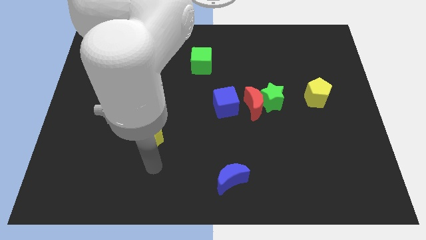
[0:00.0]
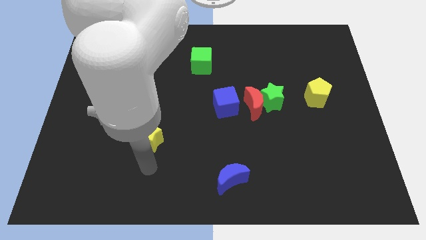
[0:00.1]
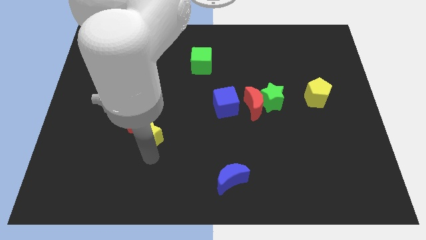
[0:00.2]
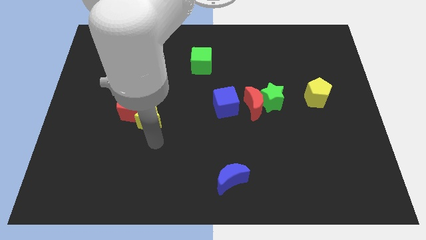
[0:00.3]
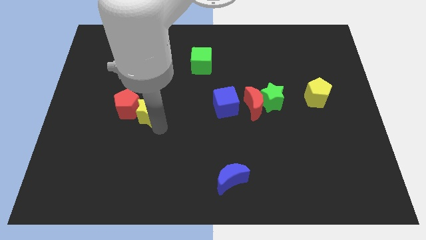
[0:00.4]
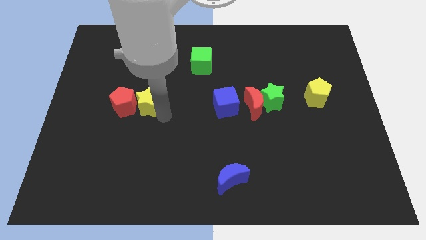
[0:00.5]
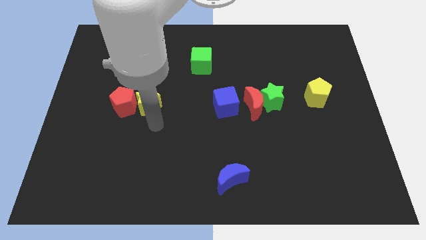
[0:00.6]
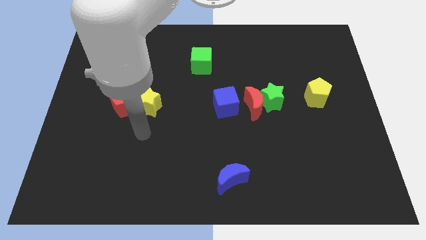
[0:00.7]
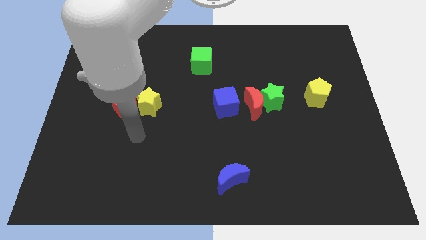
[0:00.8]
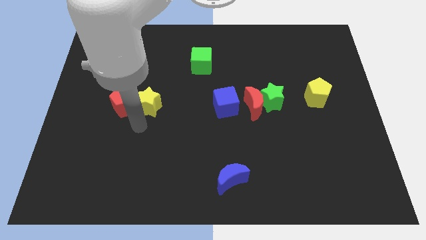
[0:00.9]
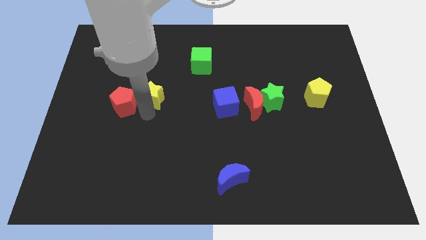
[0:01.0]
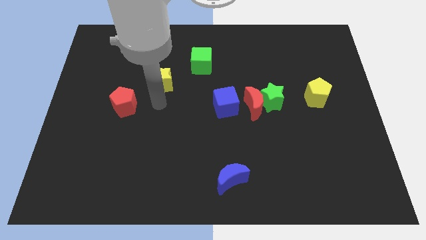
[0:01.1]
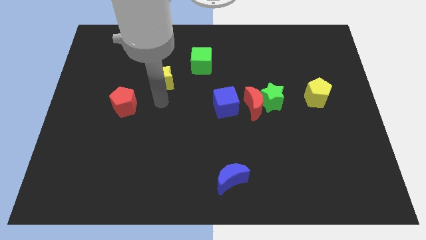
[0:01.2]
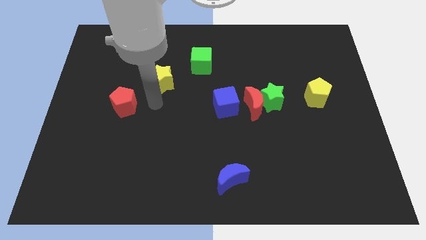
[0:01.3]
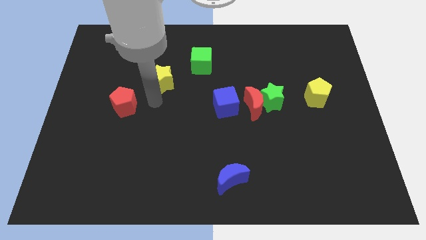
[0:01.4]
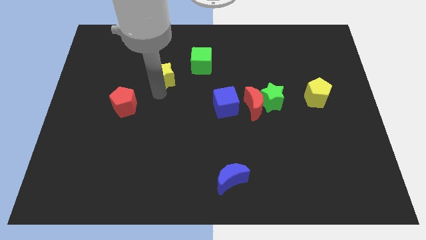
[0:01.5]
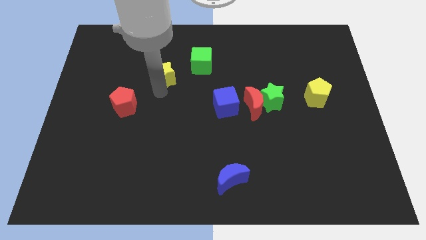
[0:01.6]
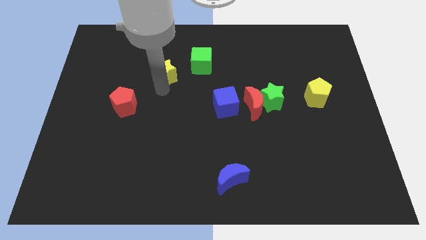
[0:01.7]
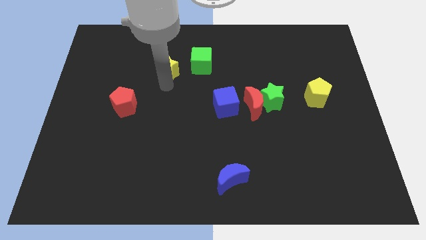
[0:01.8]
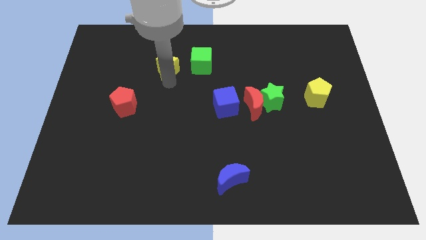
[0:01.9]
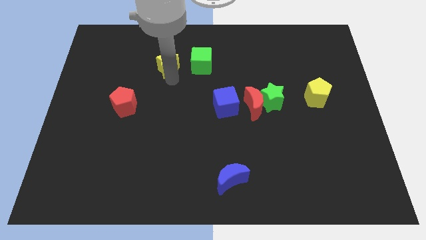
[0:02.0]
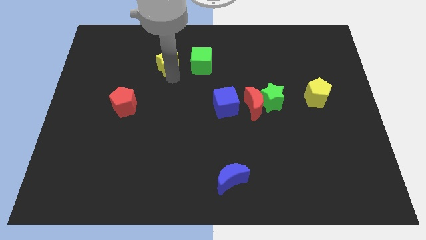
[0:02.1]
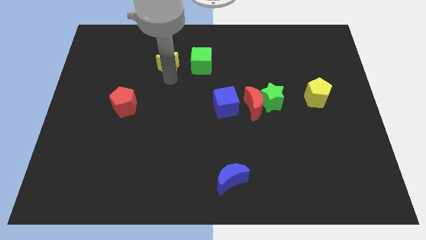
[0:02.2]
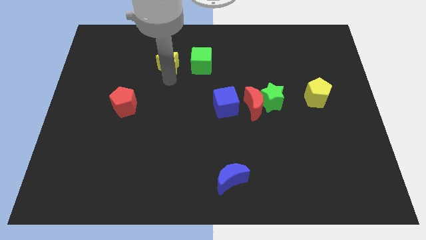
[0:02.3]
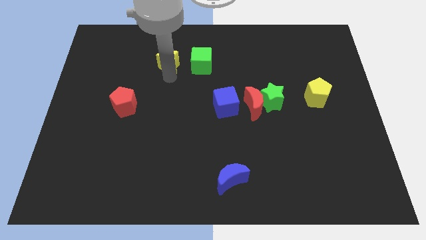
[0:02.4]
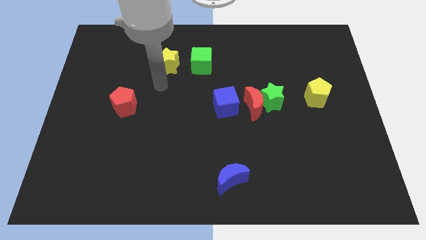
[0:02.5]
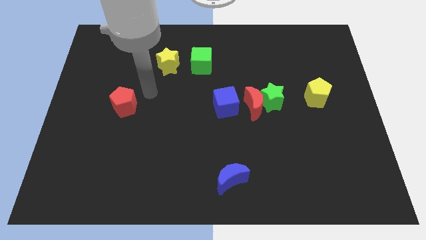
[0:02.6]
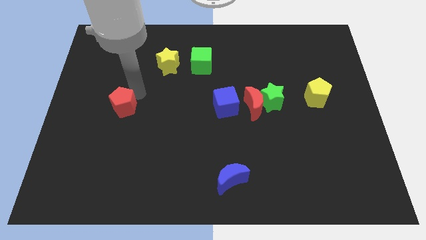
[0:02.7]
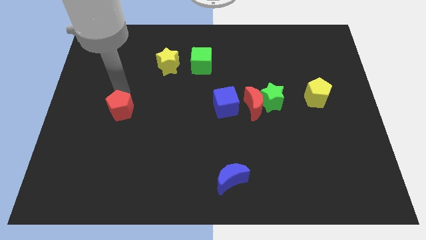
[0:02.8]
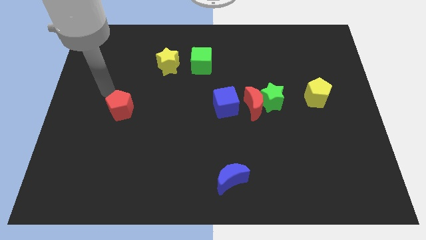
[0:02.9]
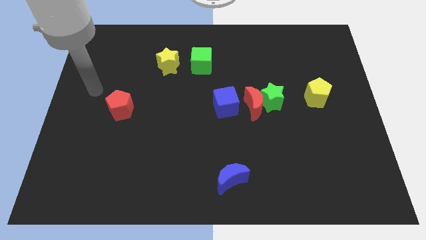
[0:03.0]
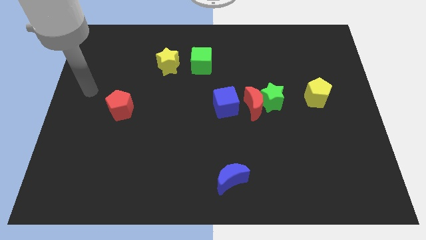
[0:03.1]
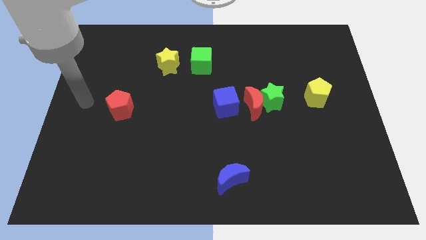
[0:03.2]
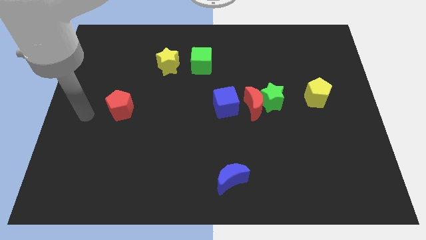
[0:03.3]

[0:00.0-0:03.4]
put the yellow star to the left side of the green cube

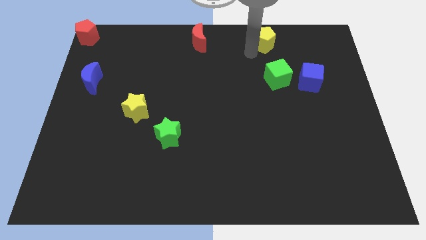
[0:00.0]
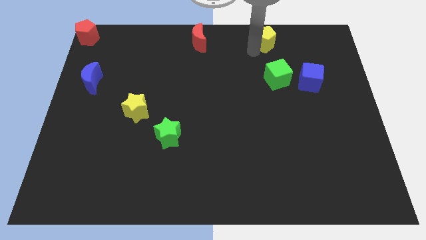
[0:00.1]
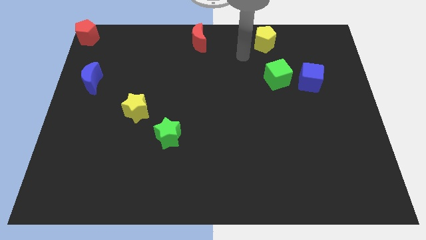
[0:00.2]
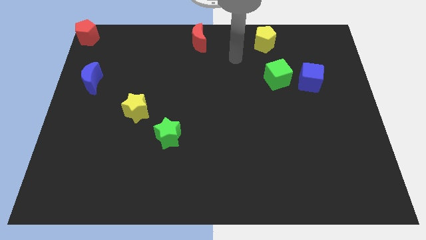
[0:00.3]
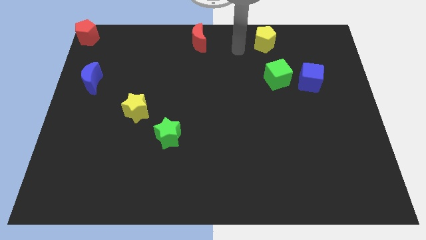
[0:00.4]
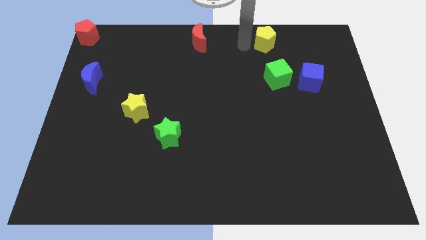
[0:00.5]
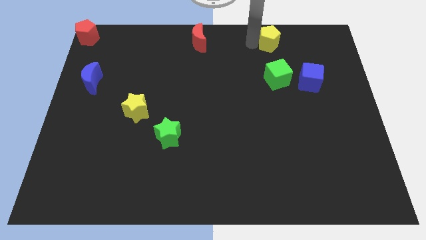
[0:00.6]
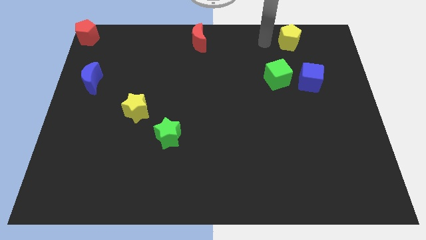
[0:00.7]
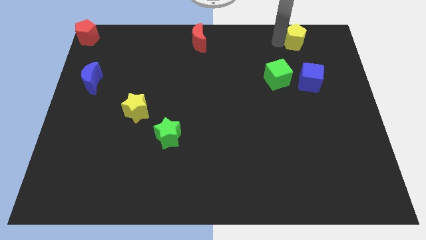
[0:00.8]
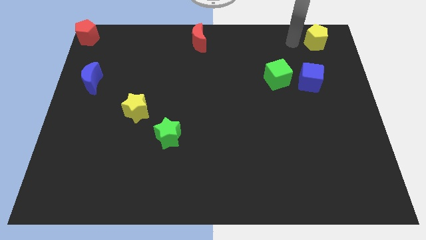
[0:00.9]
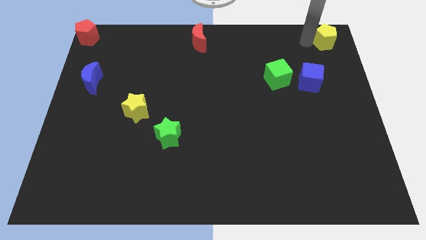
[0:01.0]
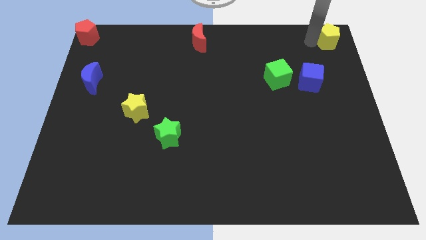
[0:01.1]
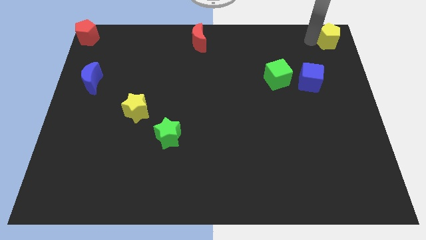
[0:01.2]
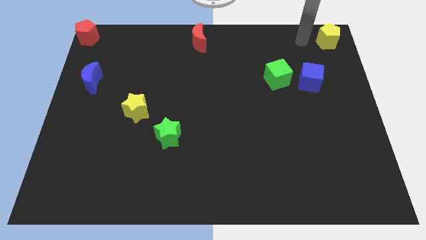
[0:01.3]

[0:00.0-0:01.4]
move the yellow pentagon to the top right corner of the board

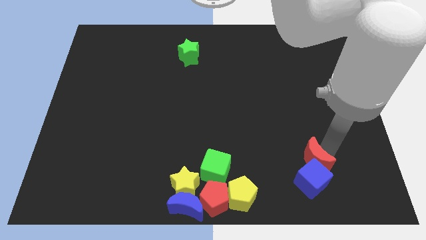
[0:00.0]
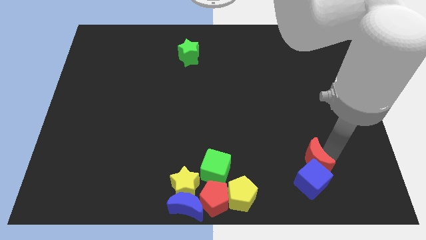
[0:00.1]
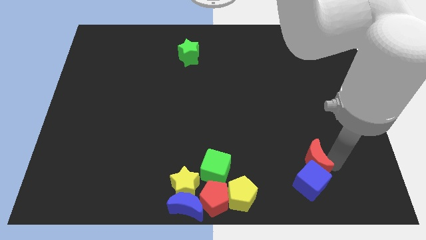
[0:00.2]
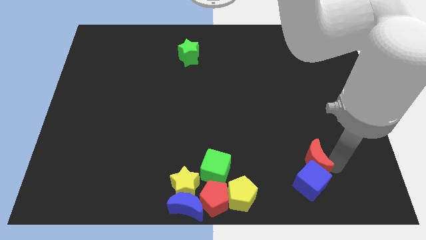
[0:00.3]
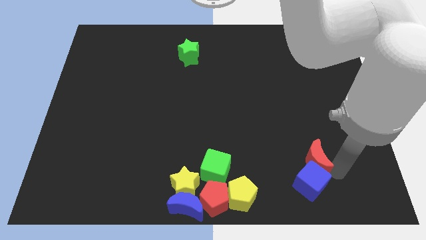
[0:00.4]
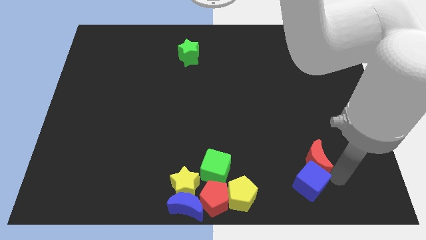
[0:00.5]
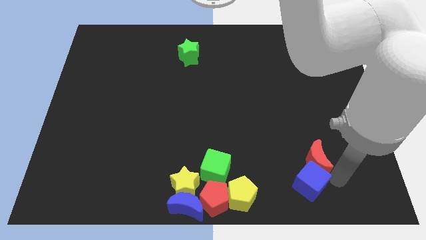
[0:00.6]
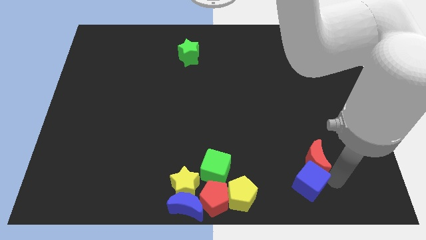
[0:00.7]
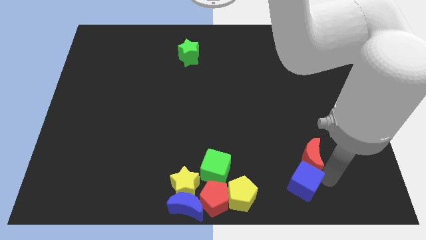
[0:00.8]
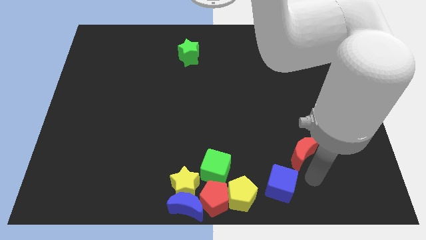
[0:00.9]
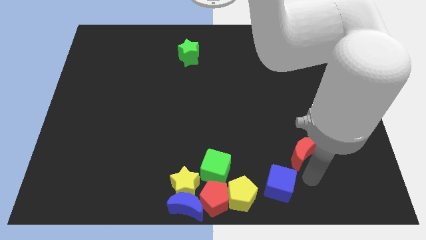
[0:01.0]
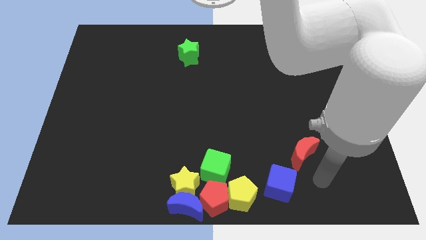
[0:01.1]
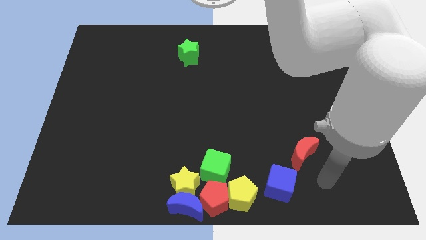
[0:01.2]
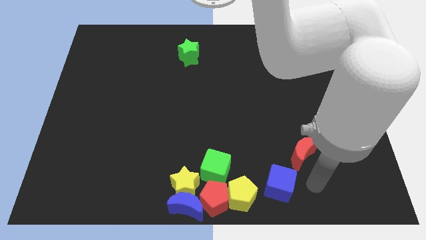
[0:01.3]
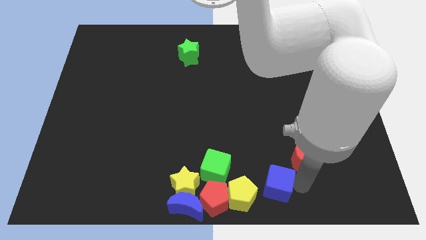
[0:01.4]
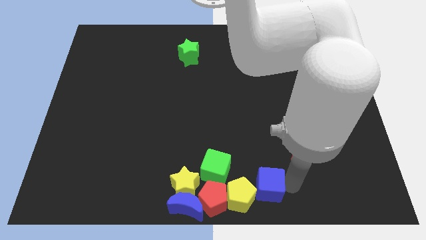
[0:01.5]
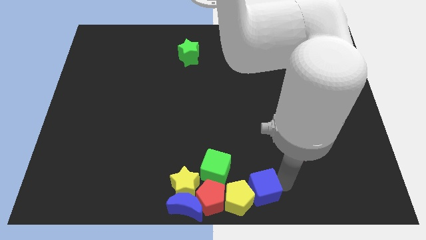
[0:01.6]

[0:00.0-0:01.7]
push the blue cube into the yellow pentagon

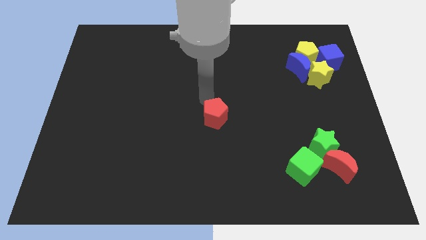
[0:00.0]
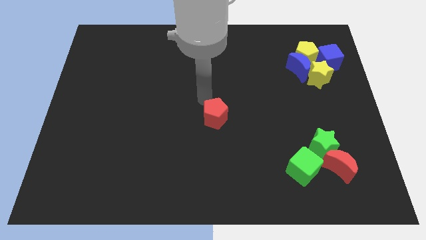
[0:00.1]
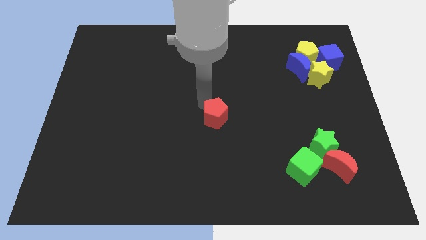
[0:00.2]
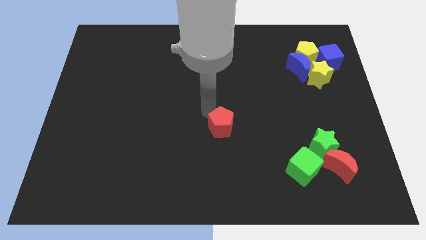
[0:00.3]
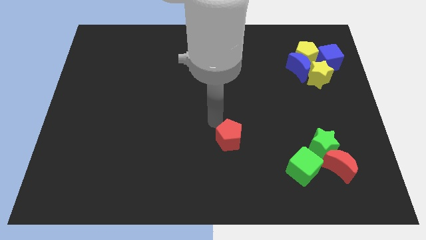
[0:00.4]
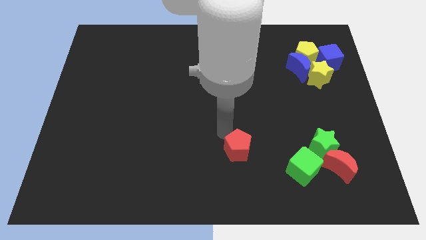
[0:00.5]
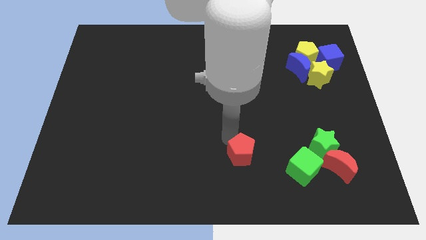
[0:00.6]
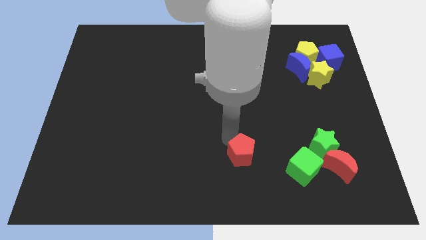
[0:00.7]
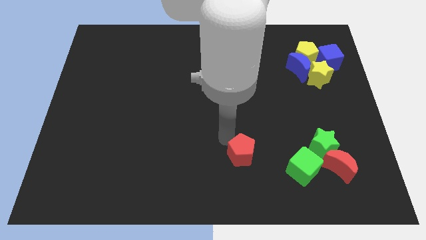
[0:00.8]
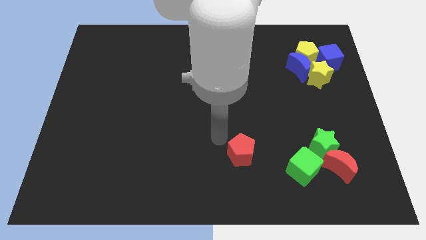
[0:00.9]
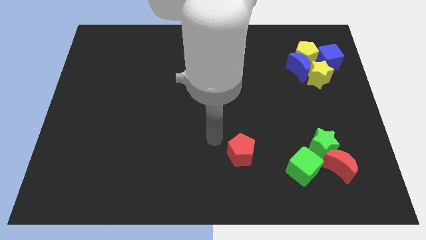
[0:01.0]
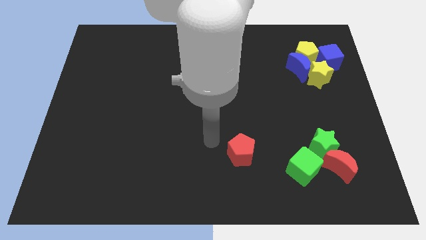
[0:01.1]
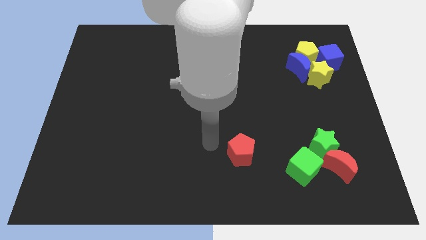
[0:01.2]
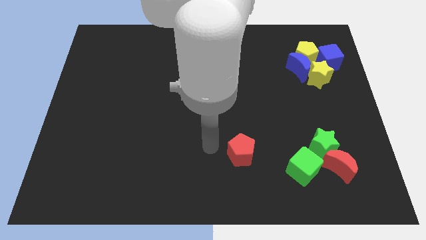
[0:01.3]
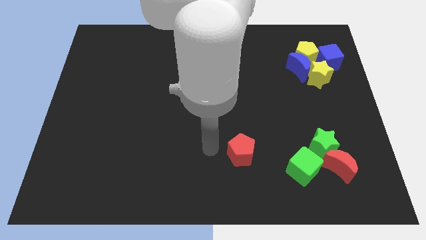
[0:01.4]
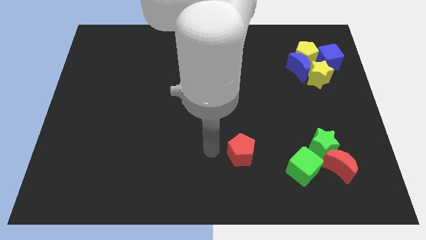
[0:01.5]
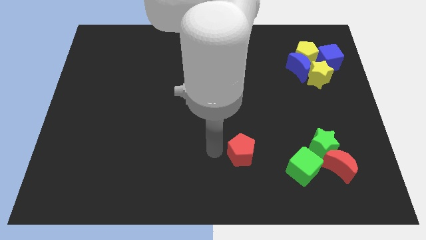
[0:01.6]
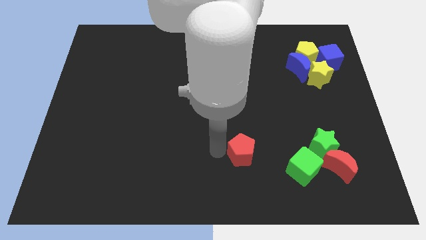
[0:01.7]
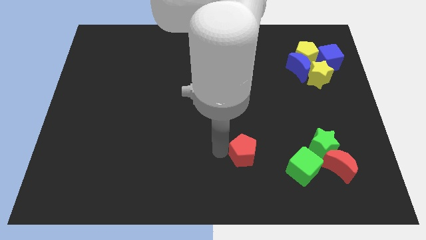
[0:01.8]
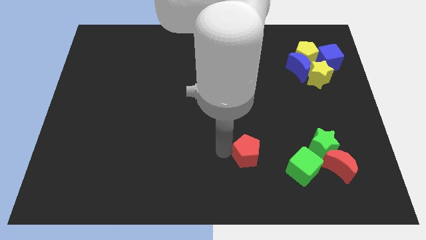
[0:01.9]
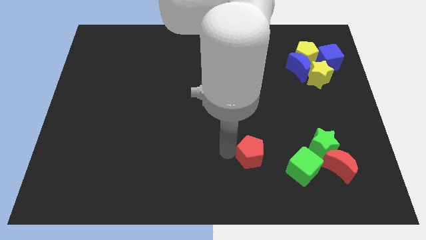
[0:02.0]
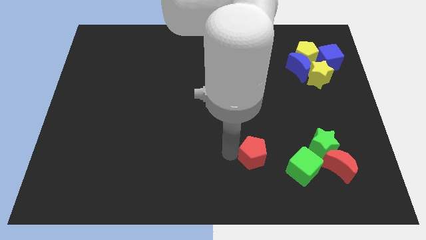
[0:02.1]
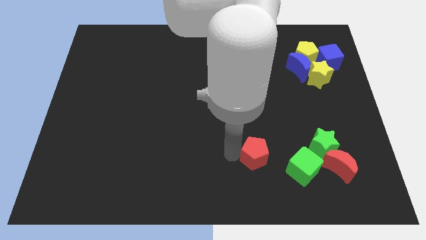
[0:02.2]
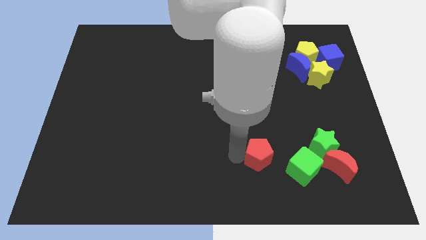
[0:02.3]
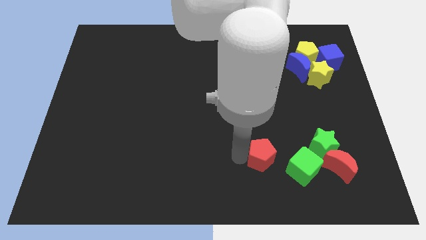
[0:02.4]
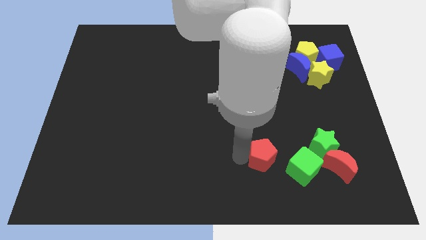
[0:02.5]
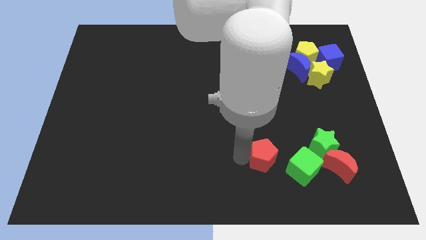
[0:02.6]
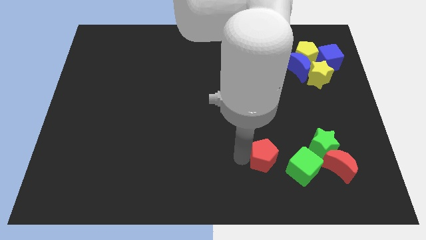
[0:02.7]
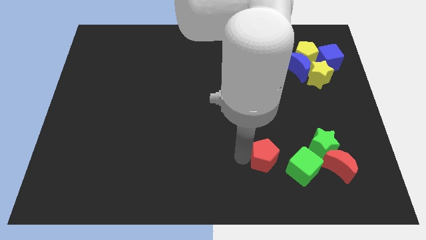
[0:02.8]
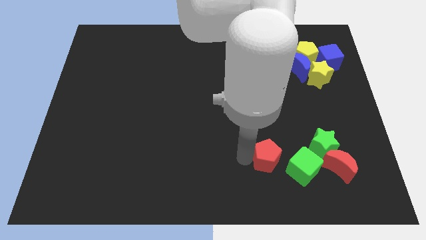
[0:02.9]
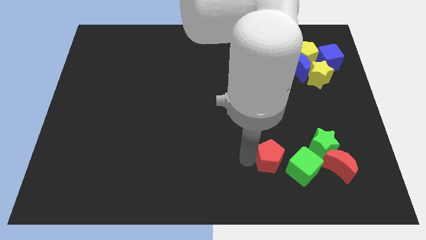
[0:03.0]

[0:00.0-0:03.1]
move the red pentagon to the left of the green cube
